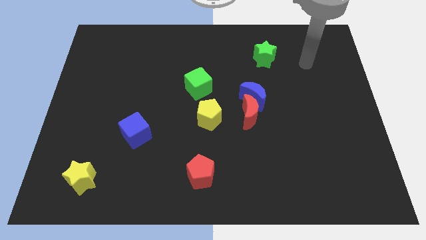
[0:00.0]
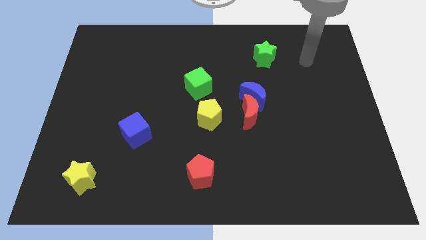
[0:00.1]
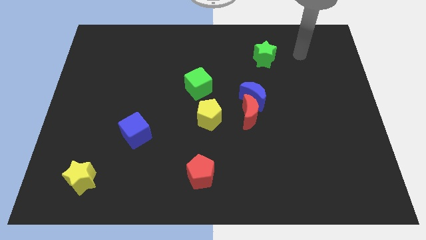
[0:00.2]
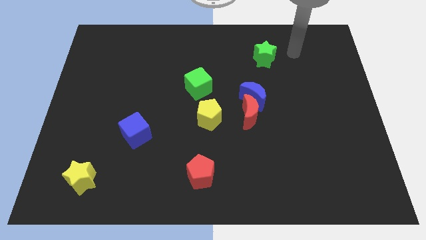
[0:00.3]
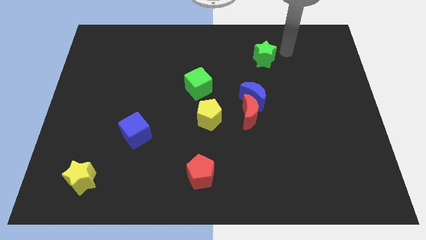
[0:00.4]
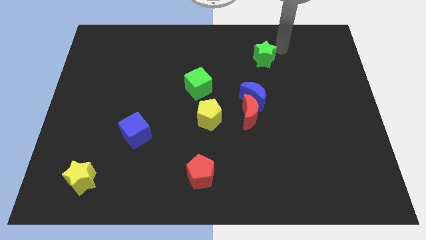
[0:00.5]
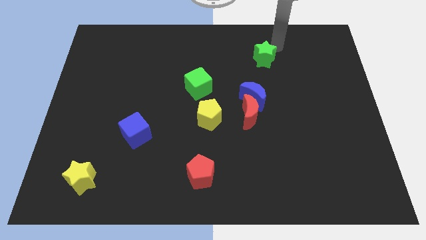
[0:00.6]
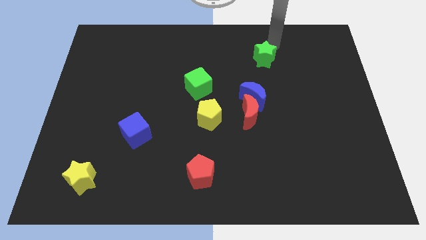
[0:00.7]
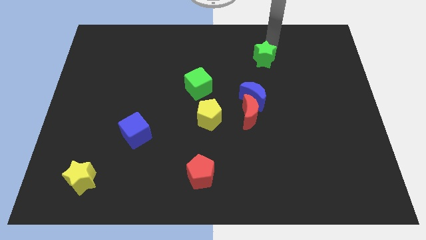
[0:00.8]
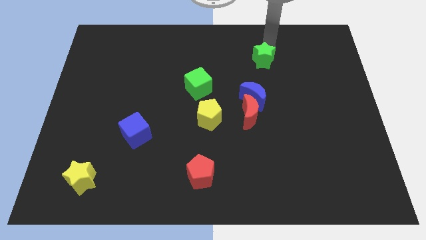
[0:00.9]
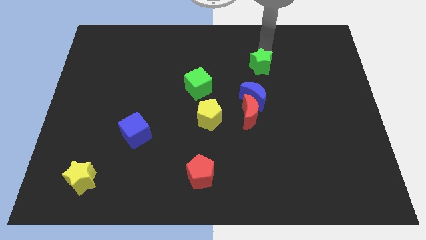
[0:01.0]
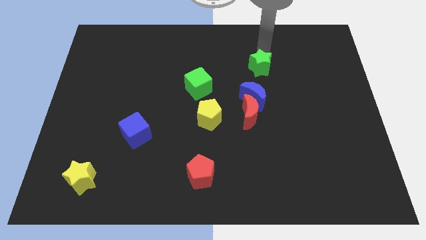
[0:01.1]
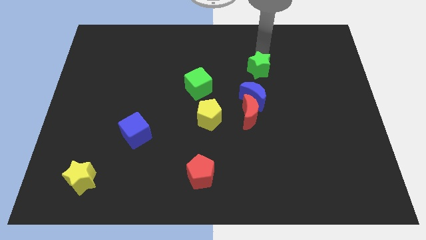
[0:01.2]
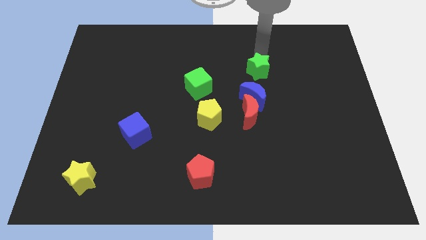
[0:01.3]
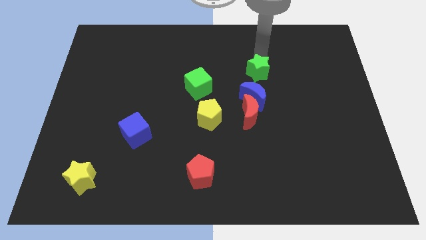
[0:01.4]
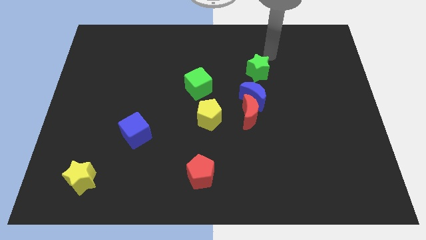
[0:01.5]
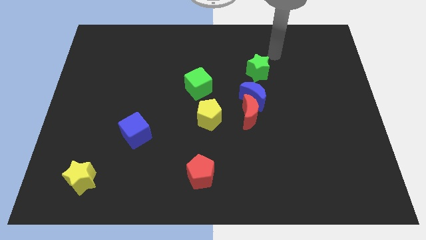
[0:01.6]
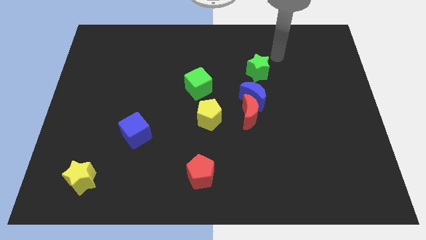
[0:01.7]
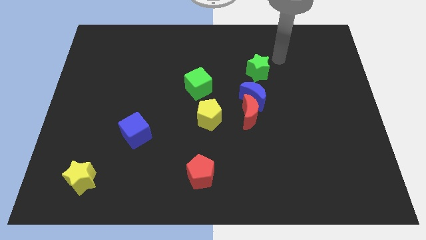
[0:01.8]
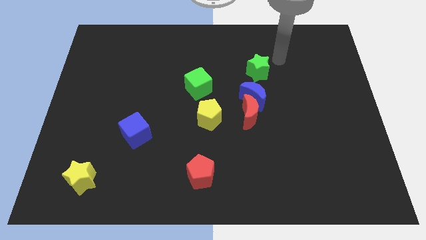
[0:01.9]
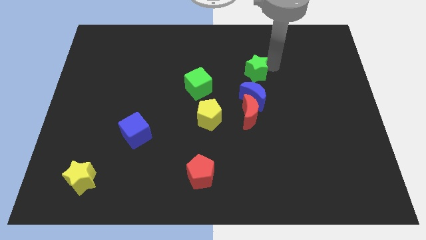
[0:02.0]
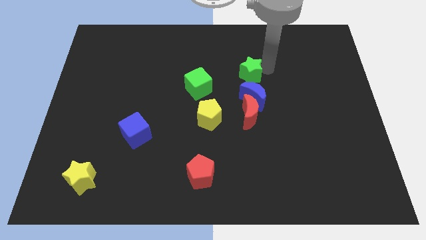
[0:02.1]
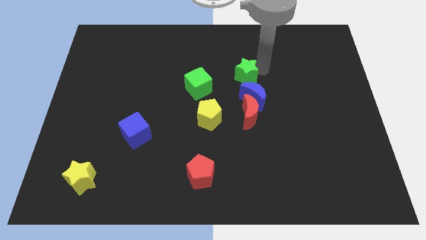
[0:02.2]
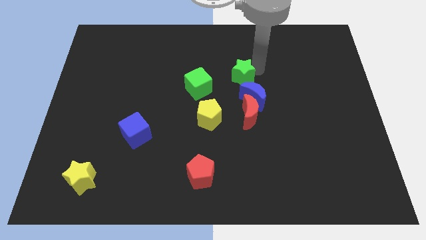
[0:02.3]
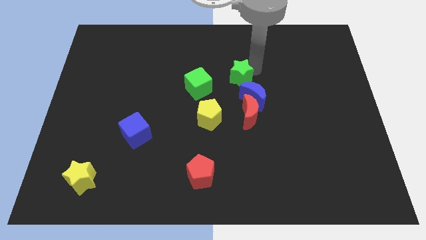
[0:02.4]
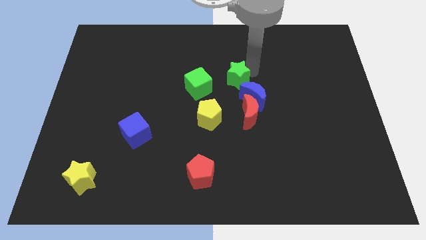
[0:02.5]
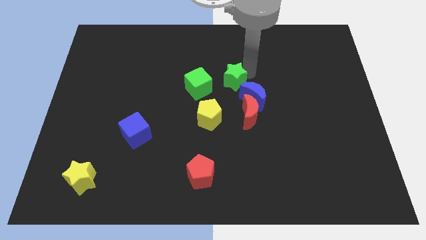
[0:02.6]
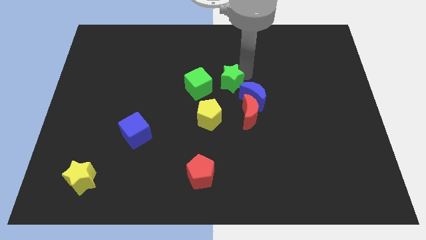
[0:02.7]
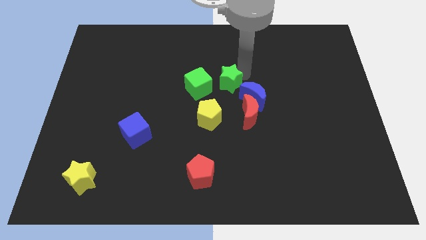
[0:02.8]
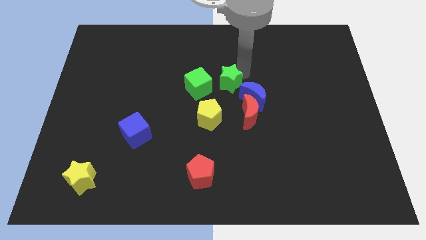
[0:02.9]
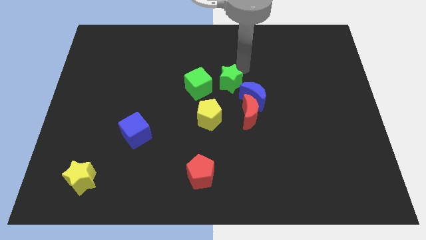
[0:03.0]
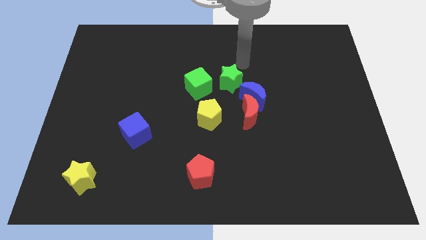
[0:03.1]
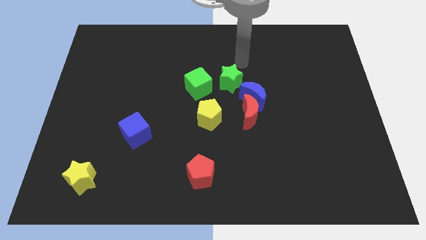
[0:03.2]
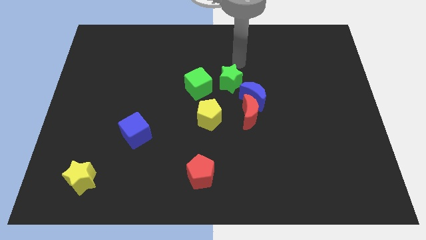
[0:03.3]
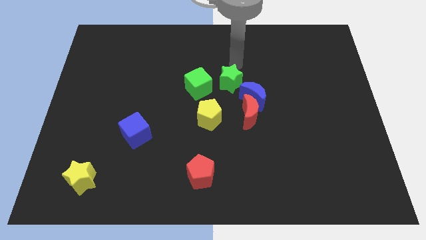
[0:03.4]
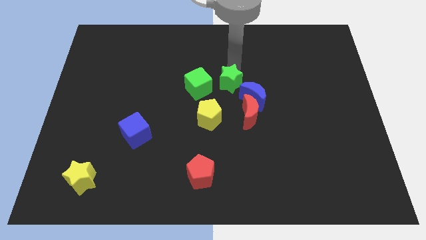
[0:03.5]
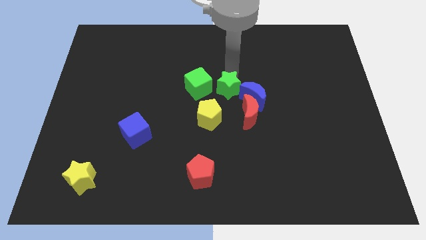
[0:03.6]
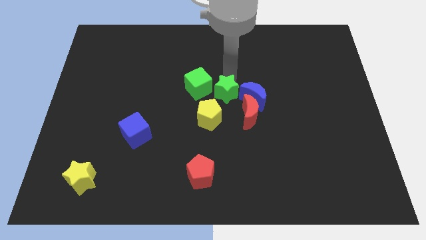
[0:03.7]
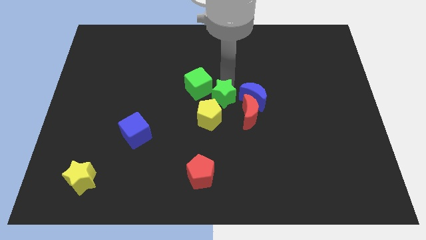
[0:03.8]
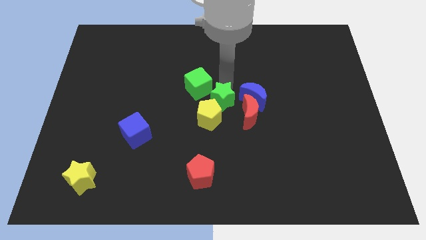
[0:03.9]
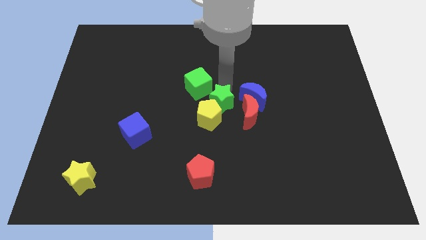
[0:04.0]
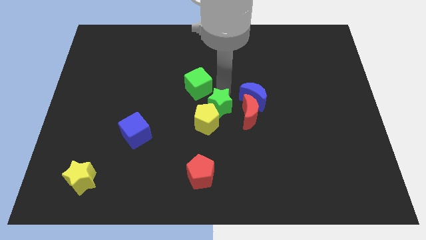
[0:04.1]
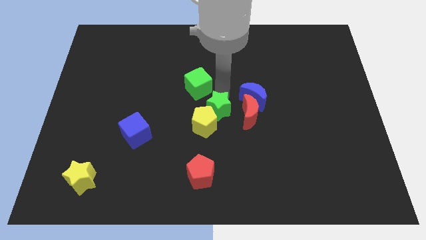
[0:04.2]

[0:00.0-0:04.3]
slide the green star to the yellow pentagon

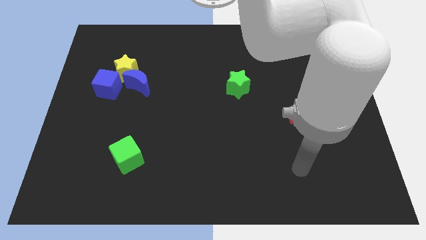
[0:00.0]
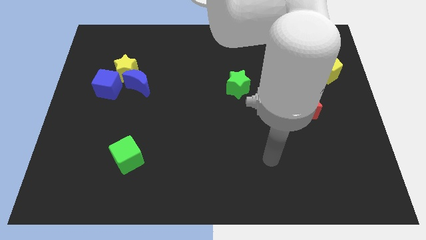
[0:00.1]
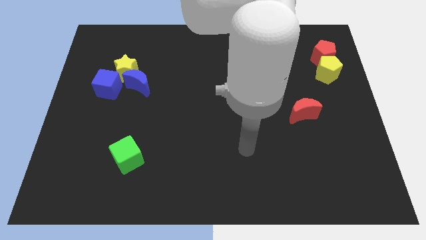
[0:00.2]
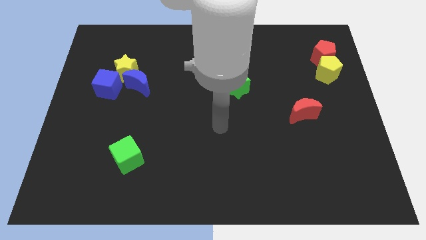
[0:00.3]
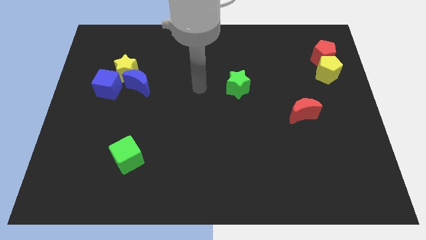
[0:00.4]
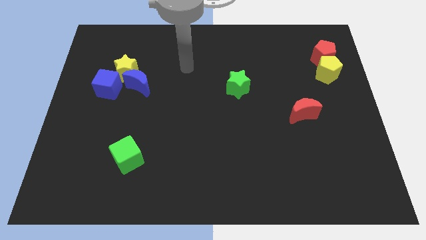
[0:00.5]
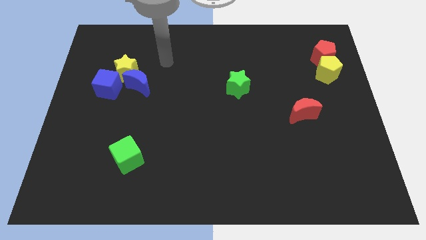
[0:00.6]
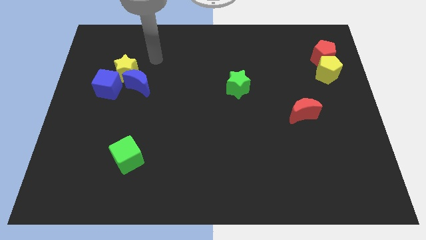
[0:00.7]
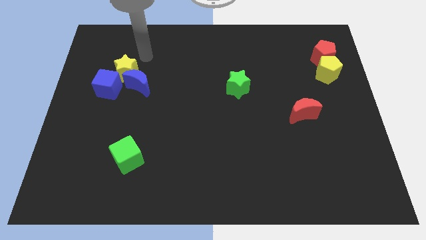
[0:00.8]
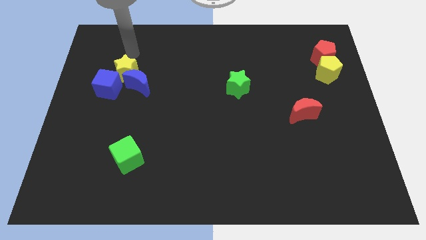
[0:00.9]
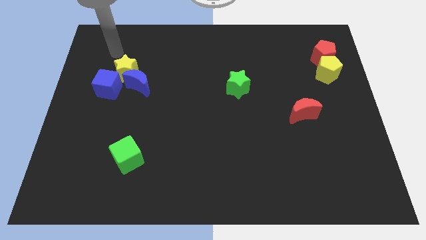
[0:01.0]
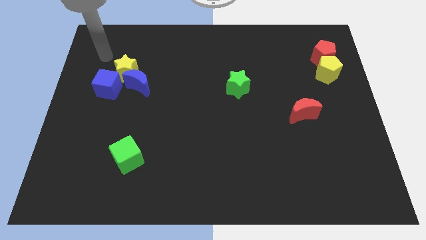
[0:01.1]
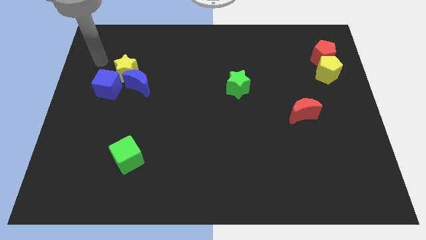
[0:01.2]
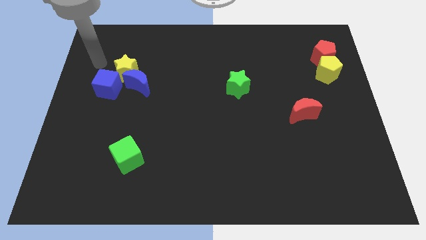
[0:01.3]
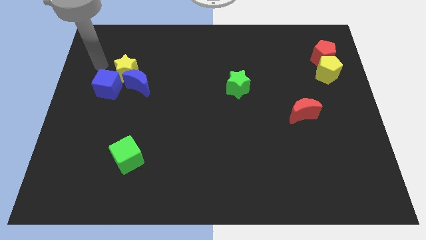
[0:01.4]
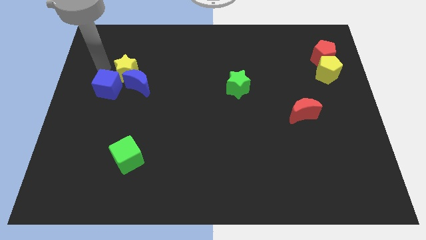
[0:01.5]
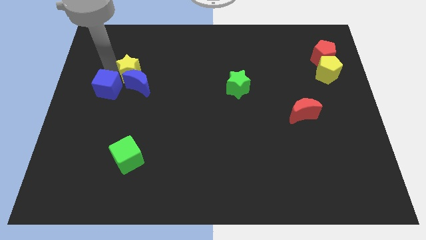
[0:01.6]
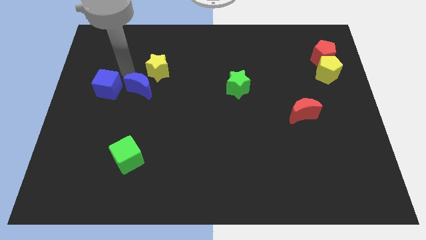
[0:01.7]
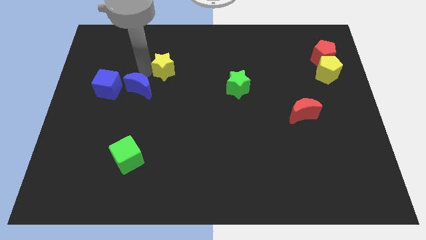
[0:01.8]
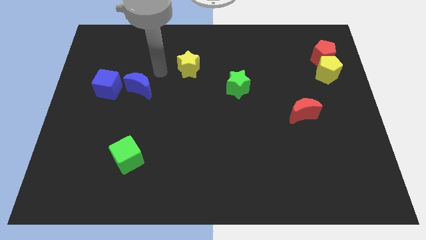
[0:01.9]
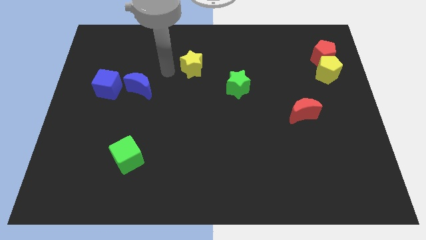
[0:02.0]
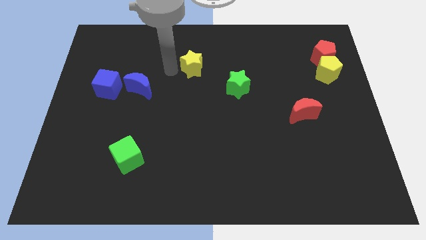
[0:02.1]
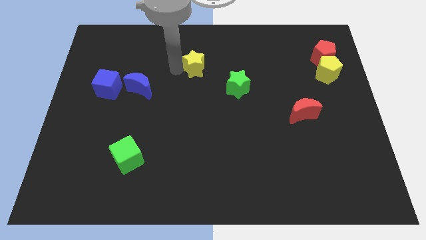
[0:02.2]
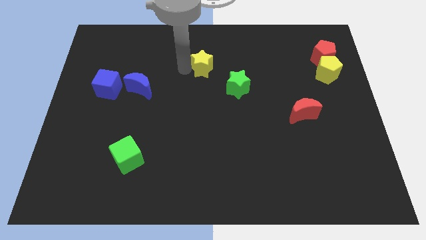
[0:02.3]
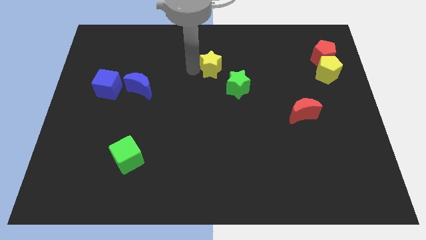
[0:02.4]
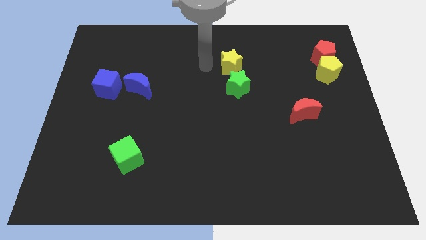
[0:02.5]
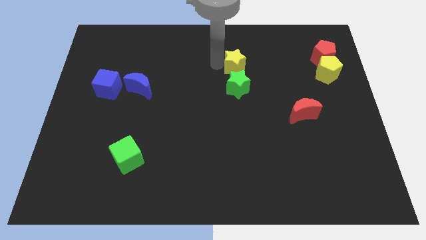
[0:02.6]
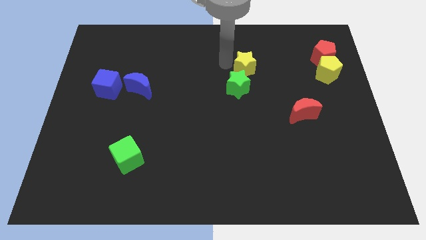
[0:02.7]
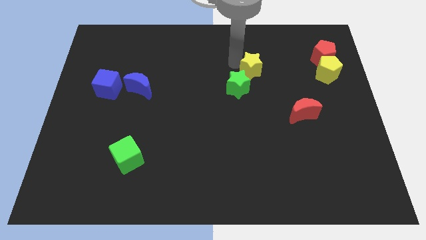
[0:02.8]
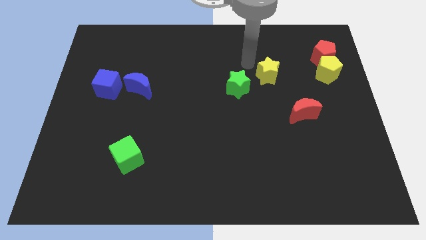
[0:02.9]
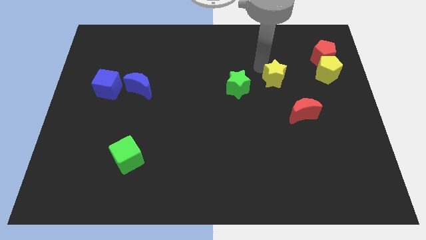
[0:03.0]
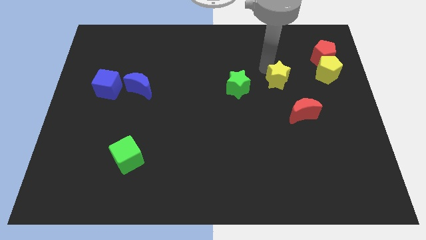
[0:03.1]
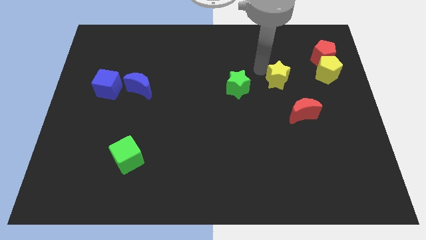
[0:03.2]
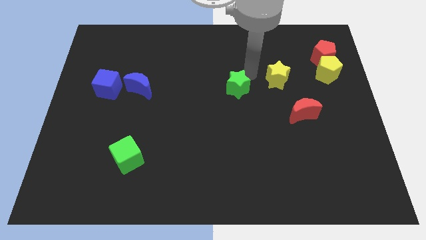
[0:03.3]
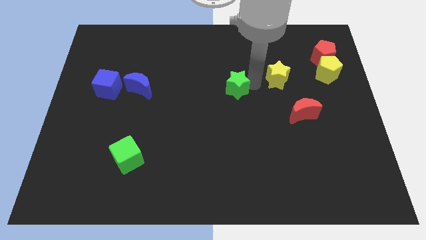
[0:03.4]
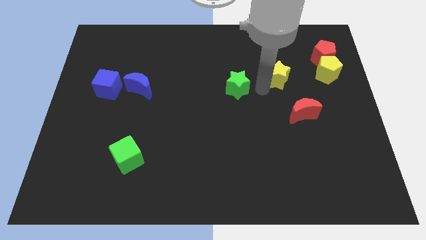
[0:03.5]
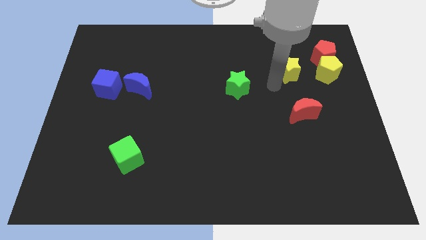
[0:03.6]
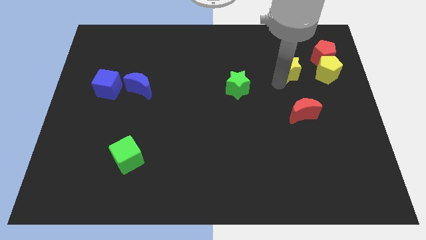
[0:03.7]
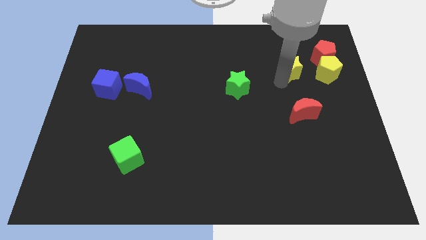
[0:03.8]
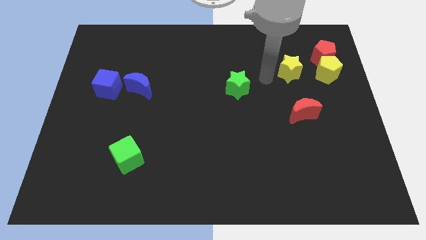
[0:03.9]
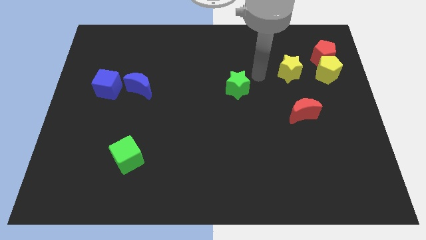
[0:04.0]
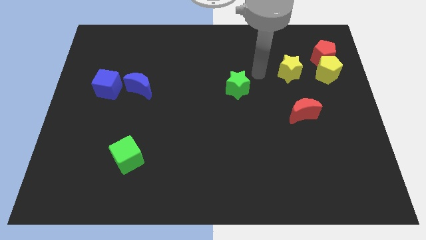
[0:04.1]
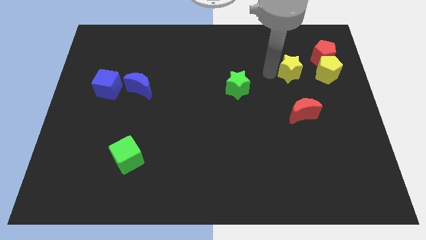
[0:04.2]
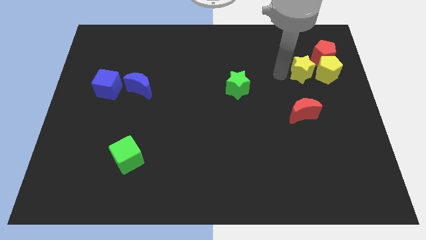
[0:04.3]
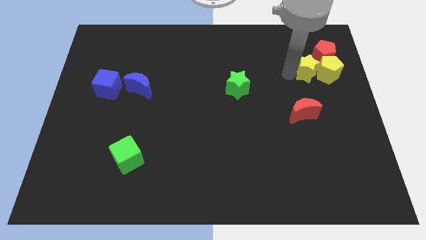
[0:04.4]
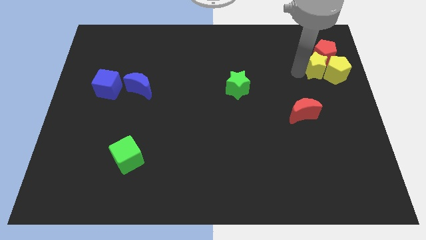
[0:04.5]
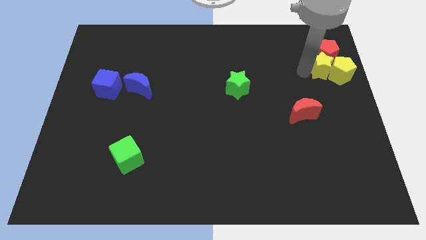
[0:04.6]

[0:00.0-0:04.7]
put the yellow star next to the yellow pentagon
